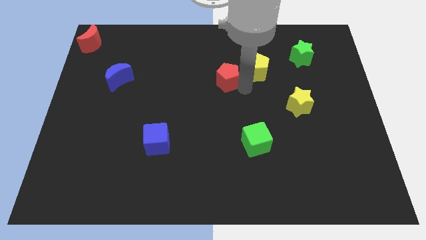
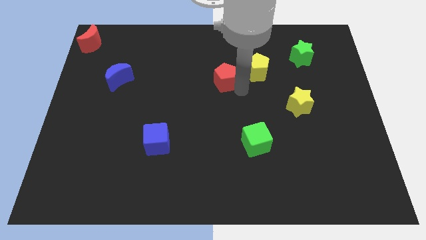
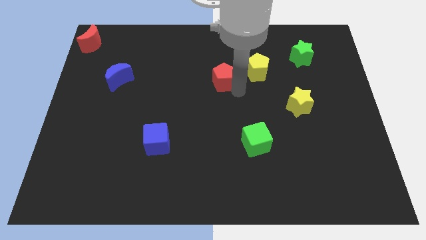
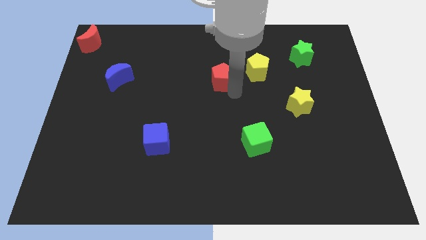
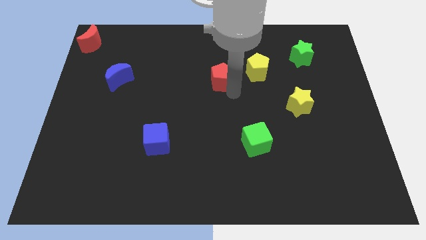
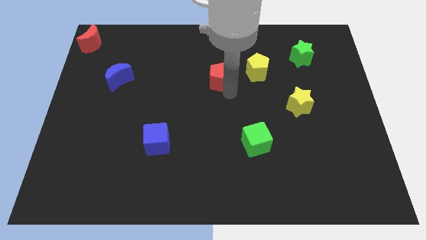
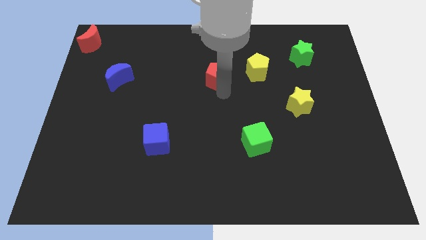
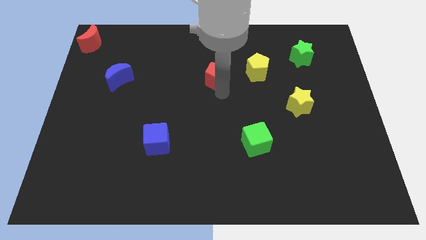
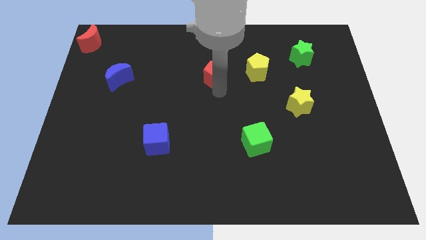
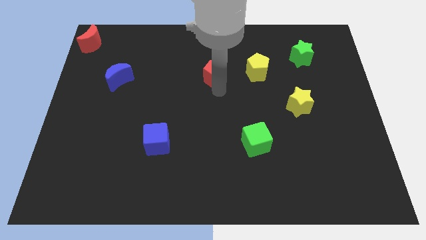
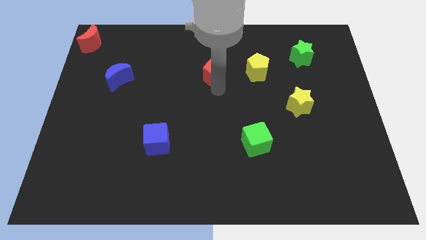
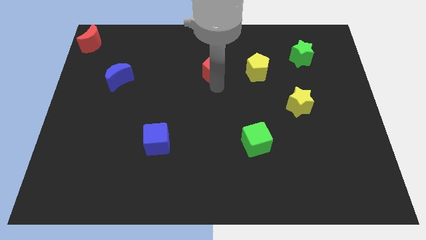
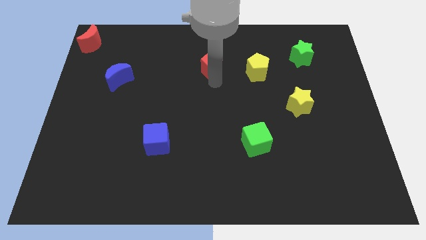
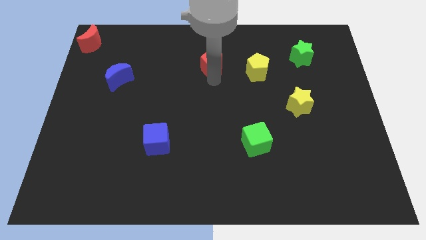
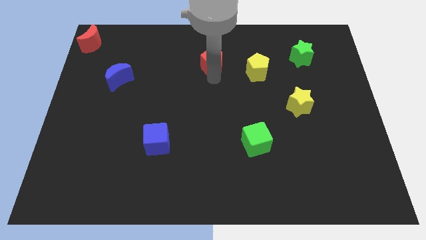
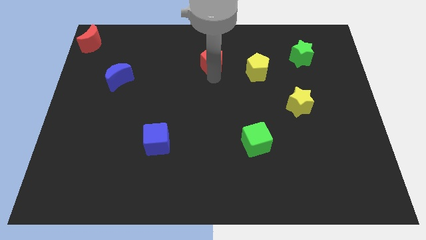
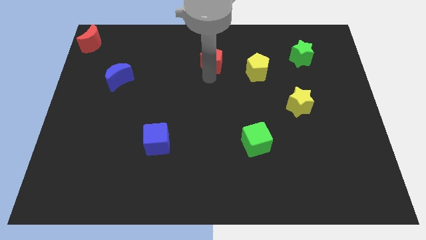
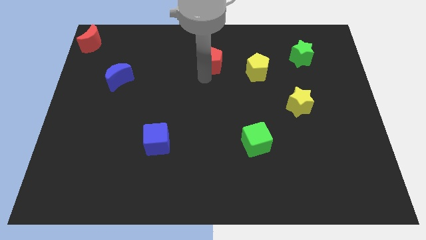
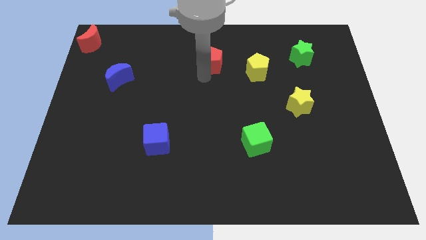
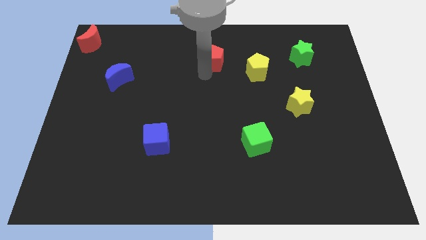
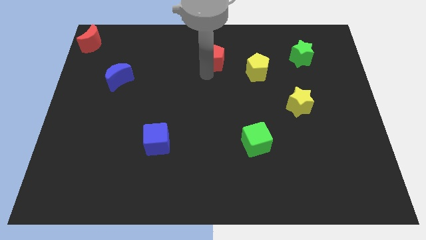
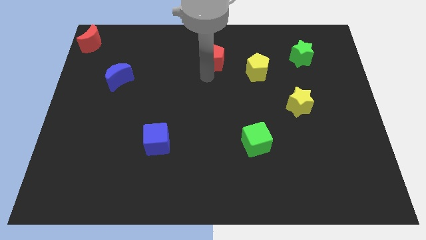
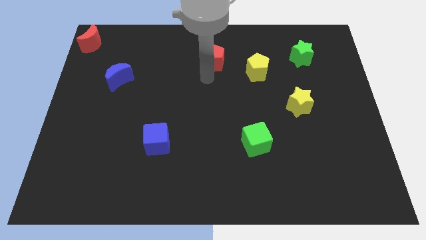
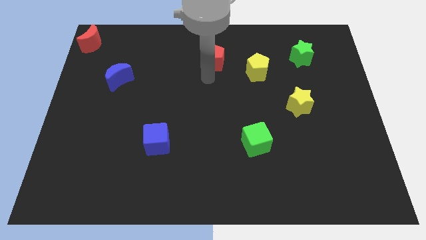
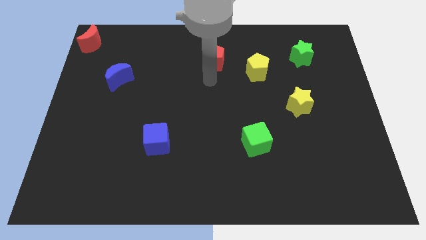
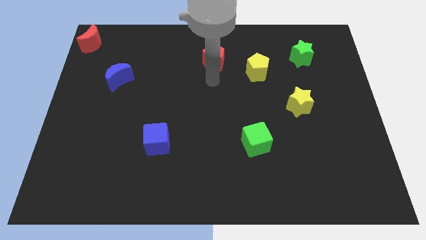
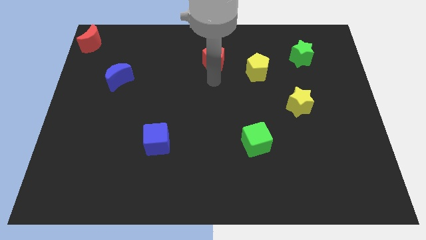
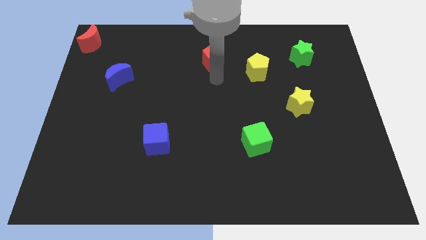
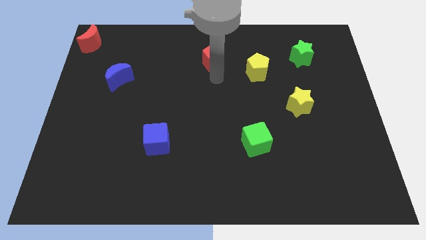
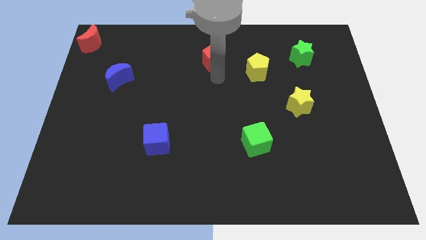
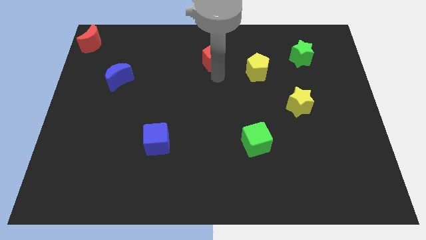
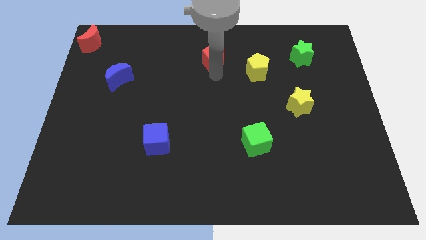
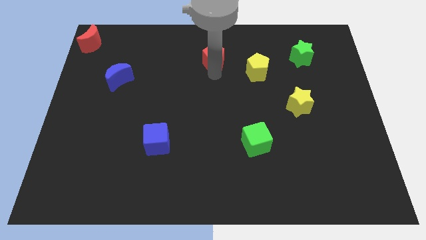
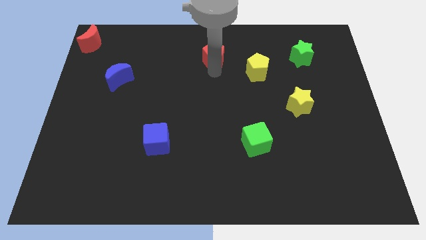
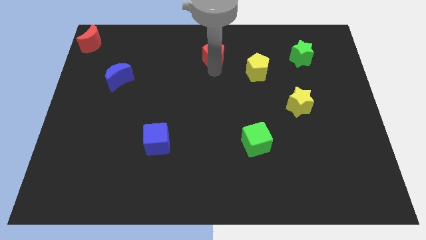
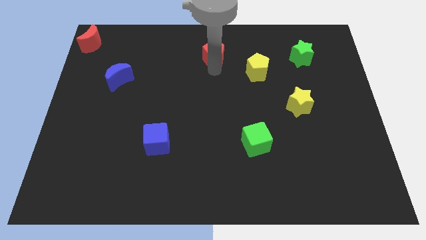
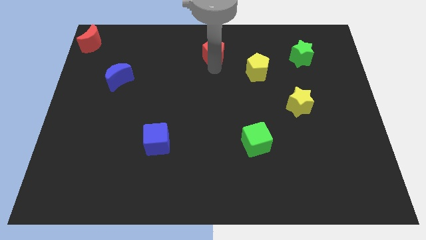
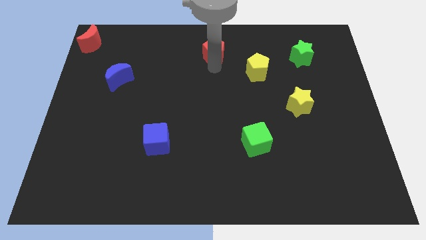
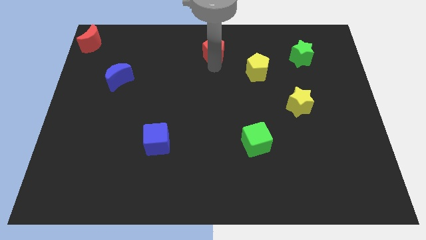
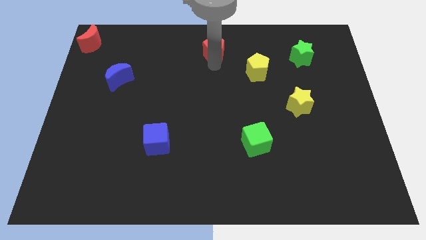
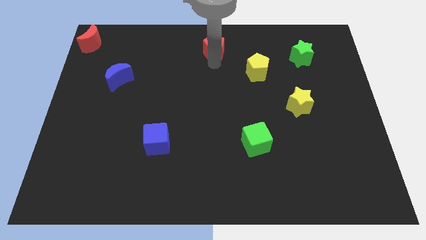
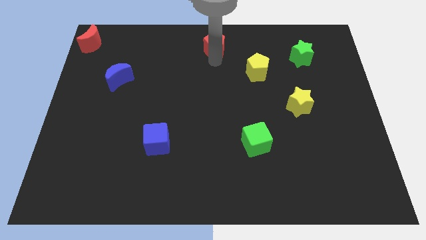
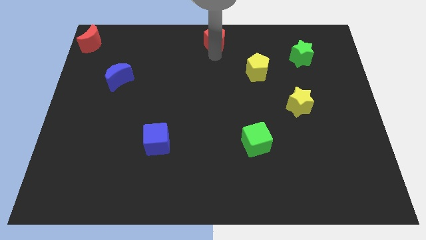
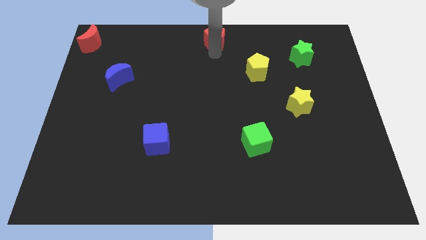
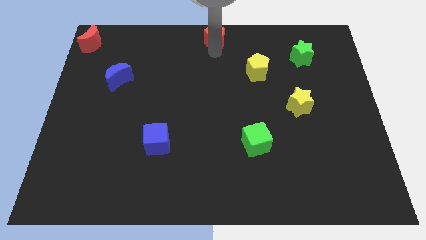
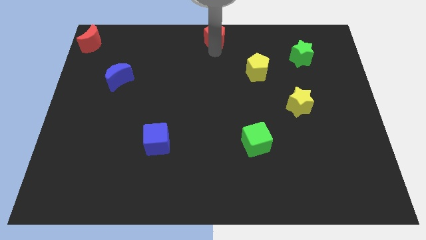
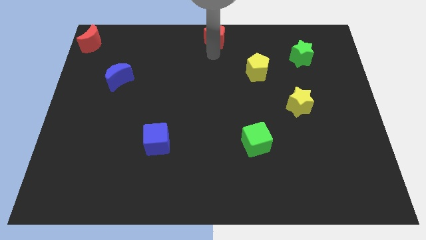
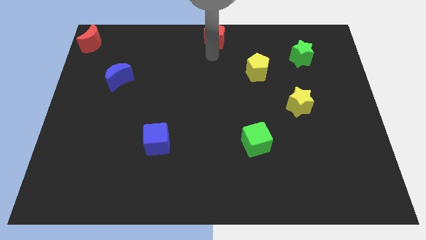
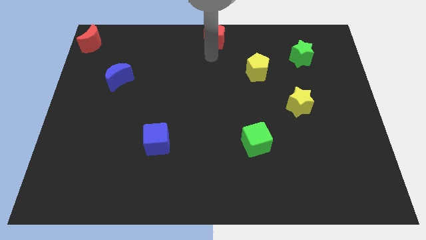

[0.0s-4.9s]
move the red pentagon to the top center

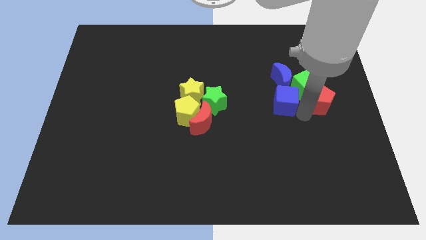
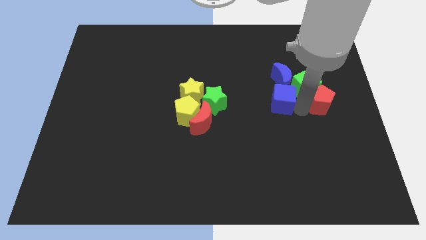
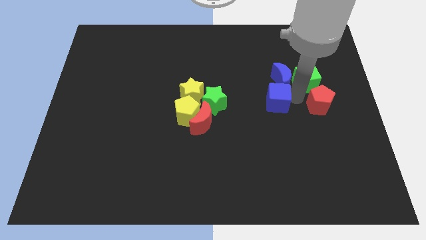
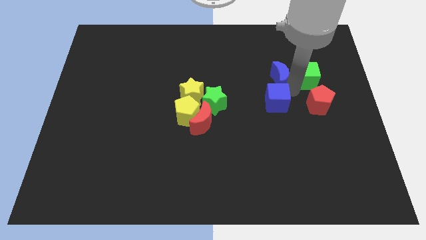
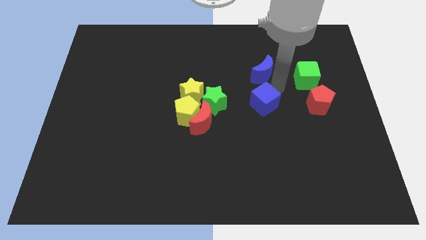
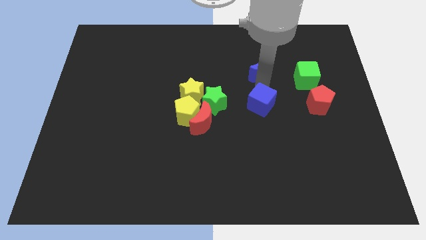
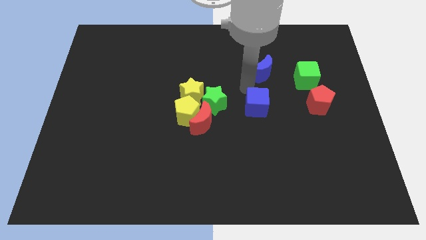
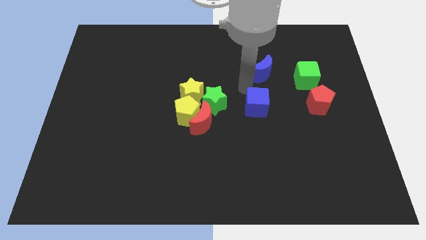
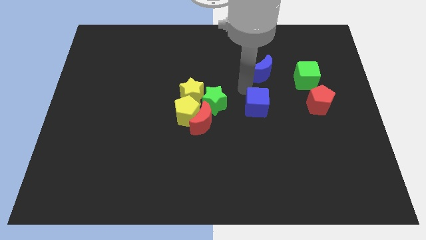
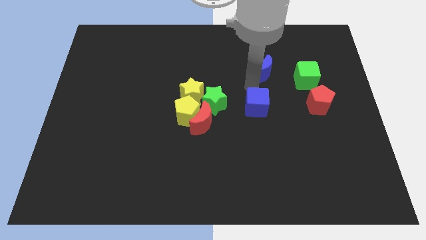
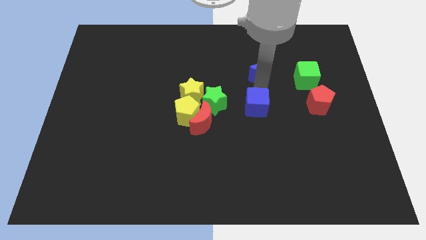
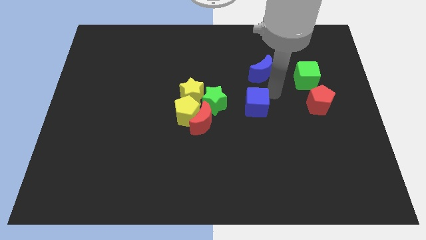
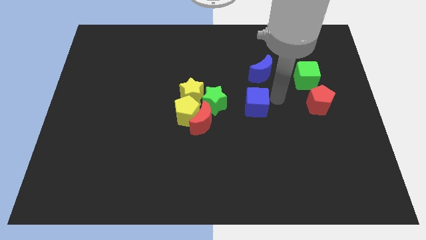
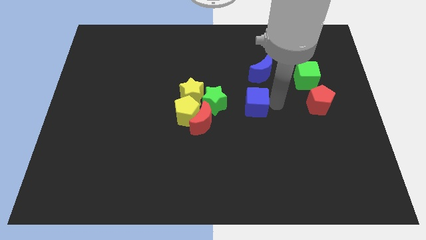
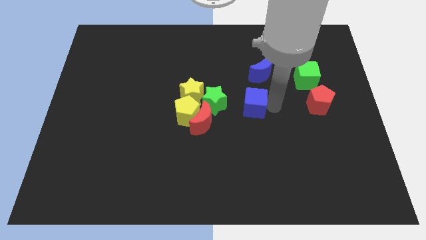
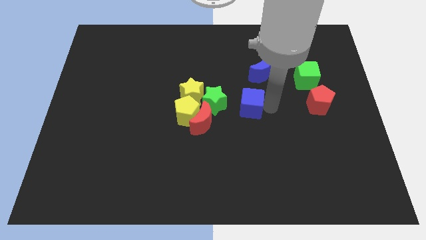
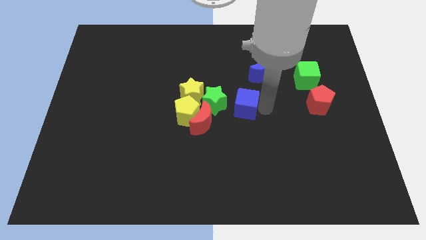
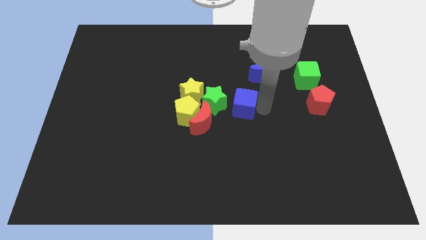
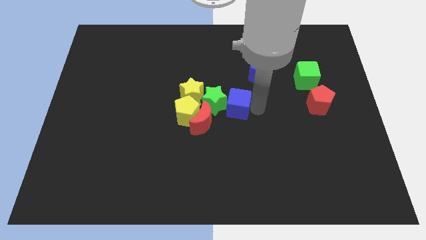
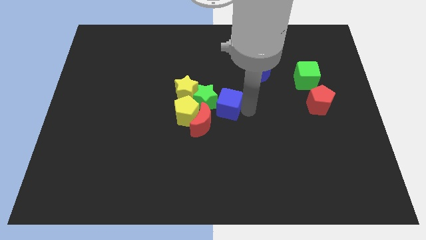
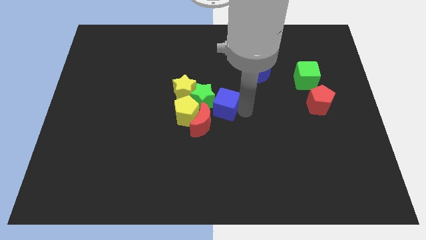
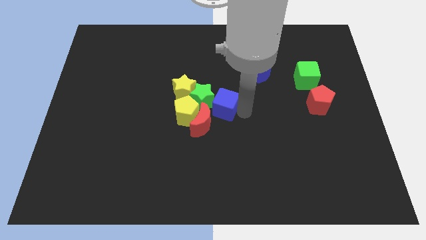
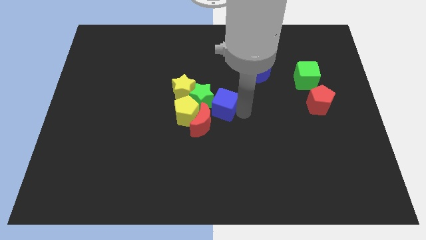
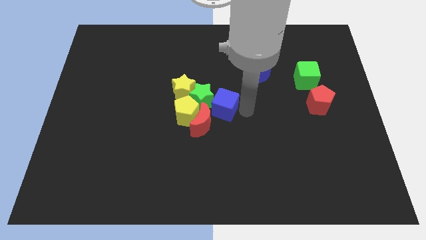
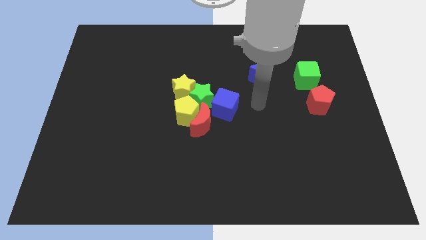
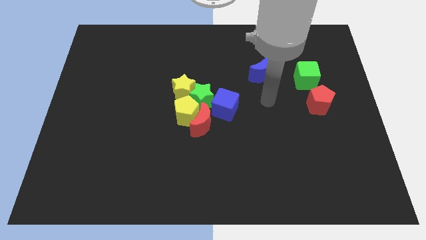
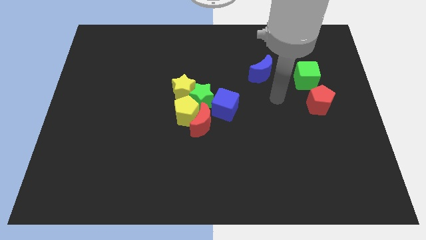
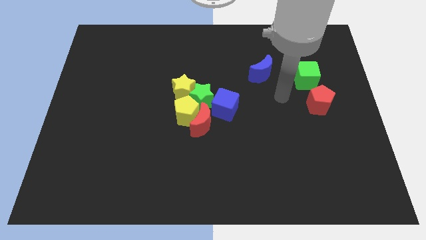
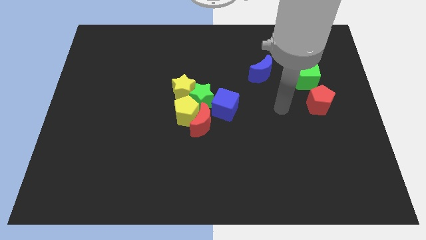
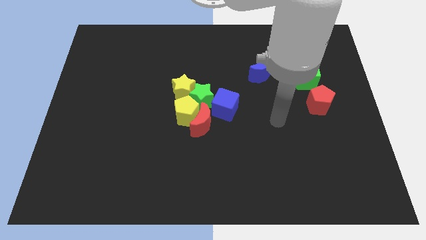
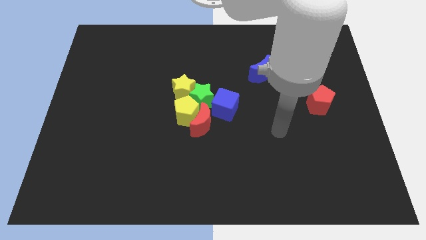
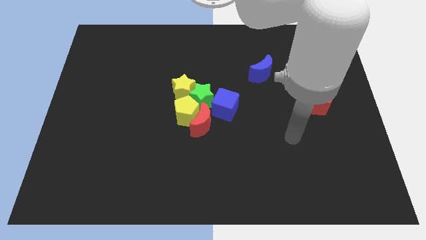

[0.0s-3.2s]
move blue cube to the right of green star

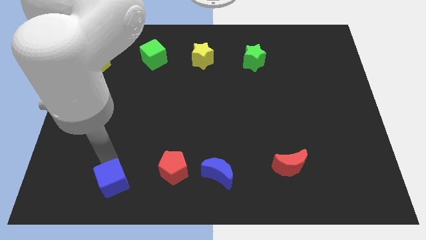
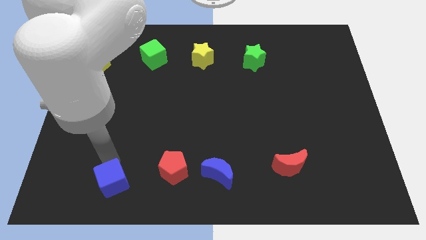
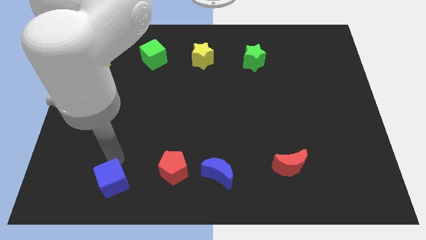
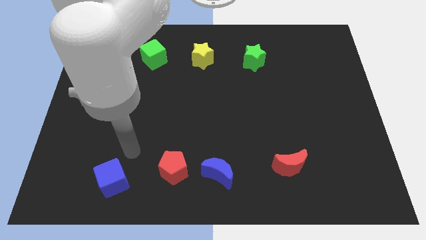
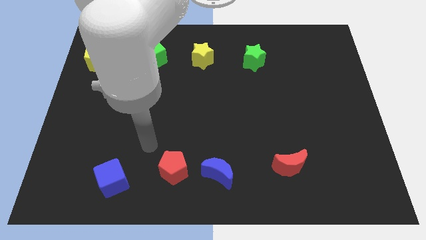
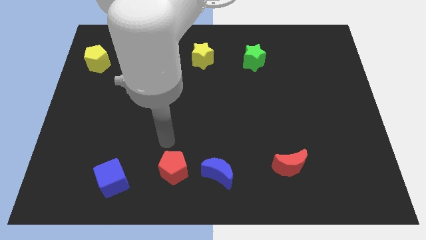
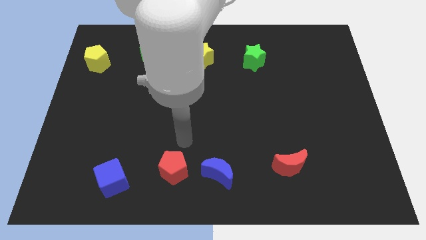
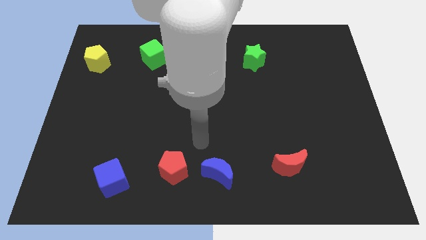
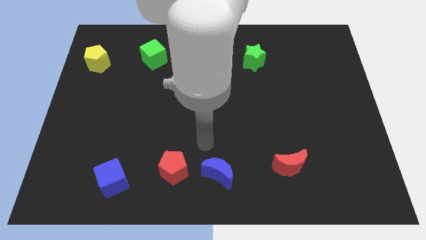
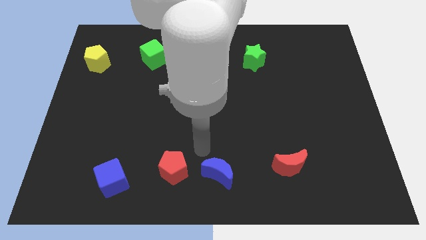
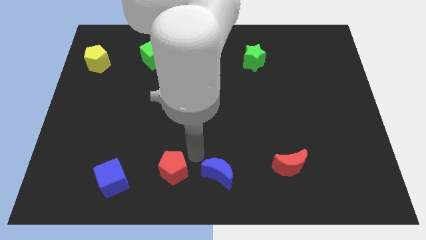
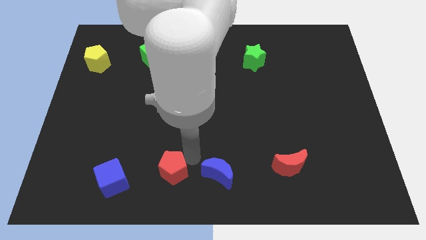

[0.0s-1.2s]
place your arm to the right of the red pentagon
